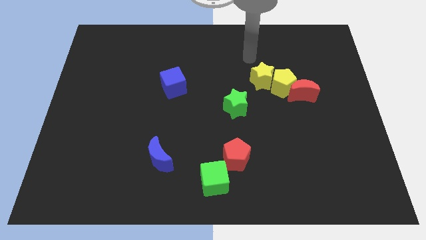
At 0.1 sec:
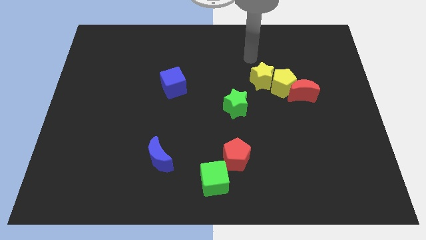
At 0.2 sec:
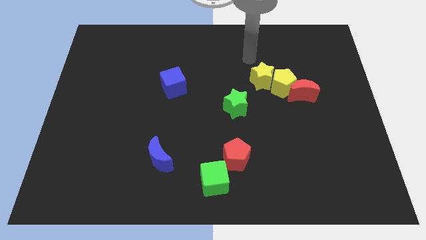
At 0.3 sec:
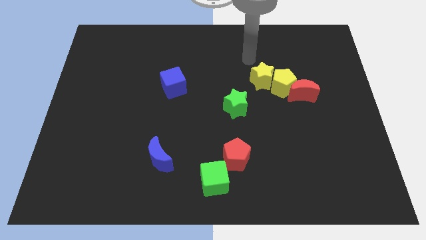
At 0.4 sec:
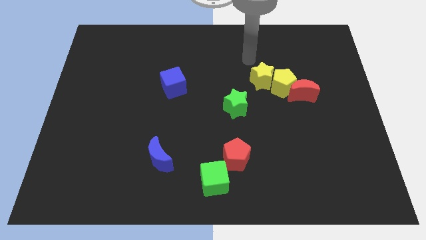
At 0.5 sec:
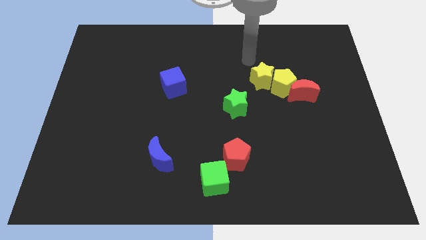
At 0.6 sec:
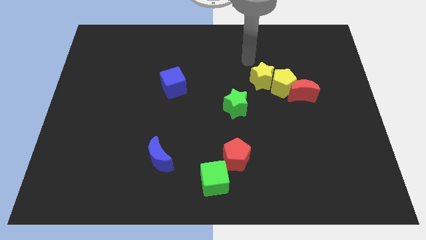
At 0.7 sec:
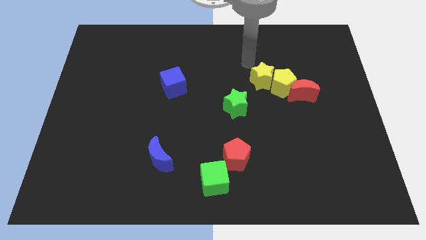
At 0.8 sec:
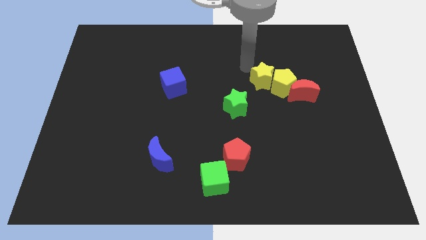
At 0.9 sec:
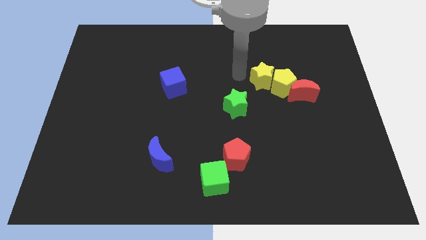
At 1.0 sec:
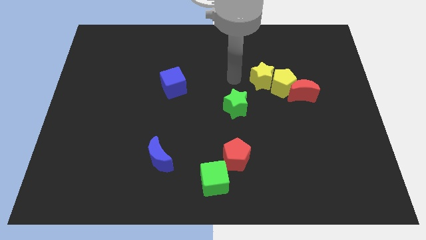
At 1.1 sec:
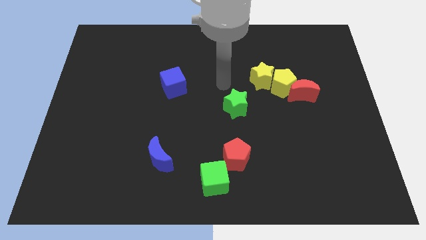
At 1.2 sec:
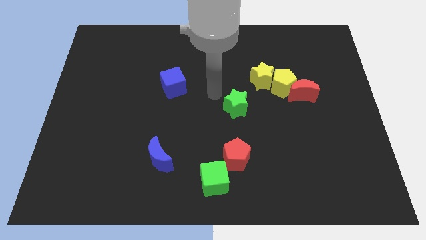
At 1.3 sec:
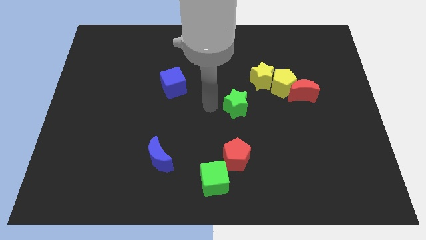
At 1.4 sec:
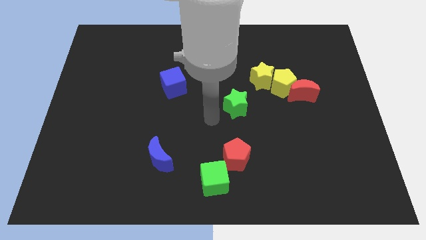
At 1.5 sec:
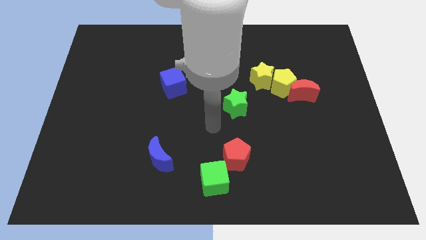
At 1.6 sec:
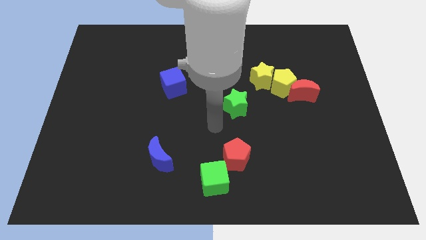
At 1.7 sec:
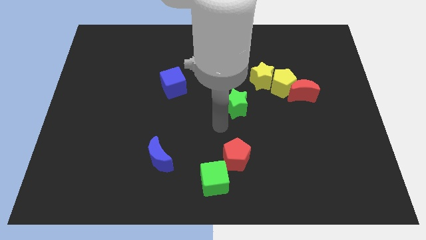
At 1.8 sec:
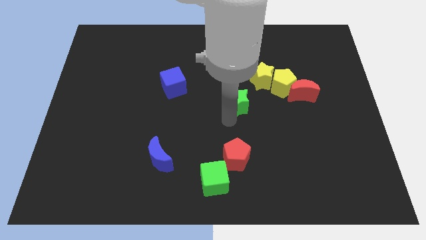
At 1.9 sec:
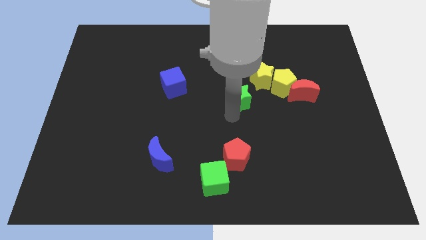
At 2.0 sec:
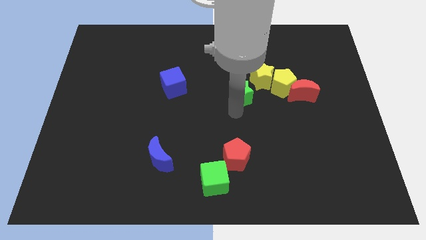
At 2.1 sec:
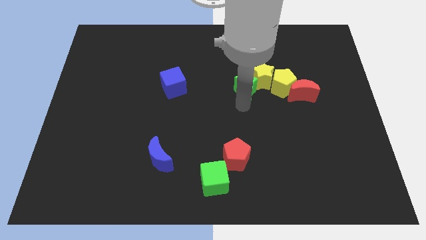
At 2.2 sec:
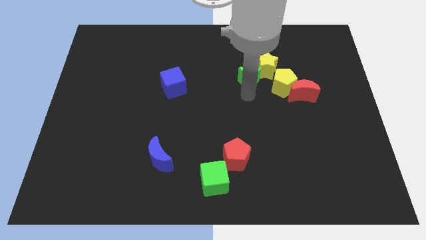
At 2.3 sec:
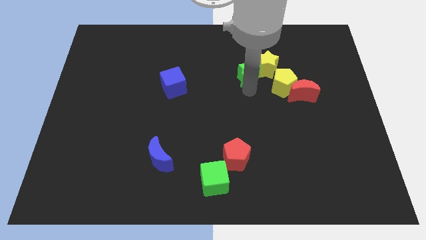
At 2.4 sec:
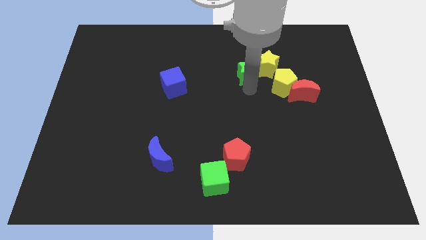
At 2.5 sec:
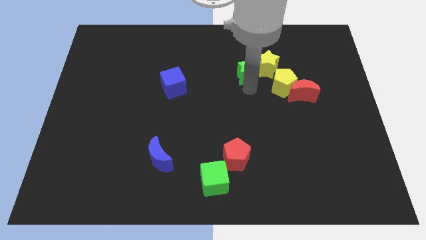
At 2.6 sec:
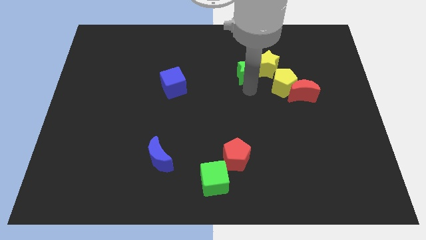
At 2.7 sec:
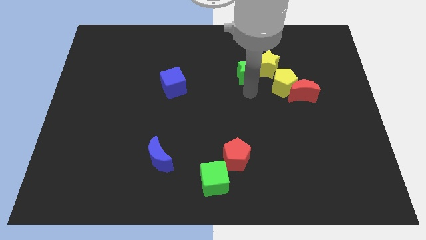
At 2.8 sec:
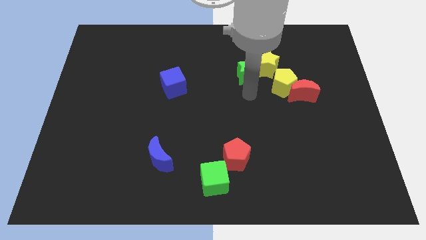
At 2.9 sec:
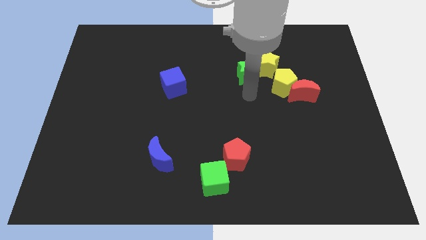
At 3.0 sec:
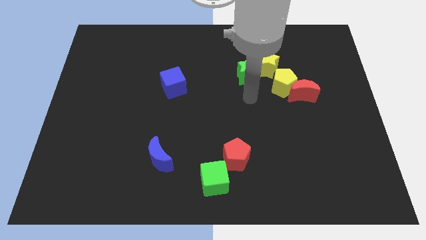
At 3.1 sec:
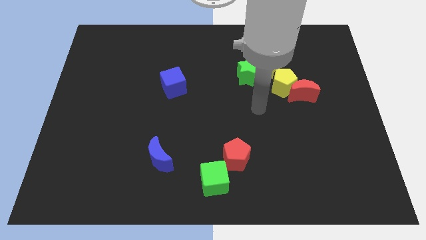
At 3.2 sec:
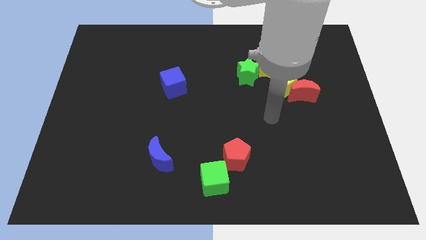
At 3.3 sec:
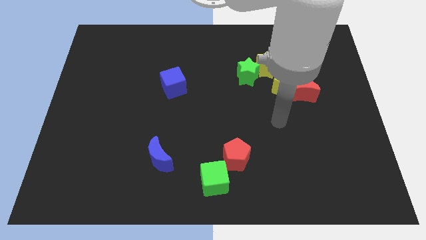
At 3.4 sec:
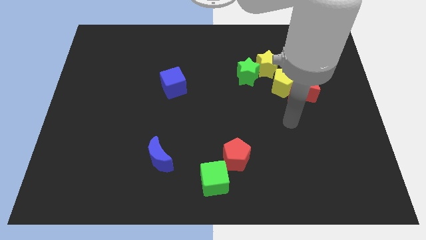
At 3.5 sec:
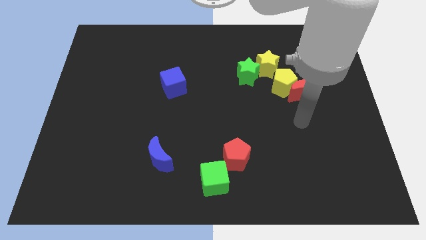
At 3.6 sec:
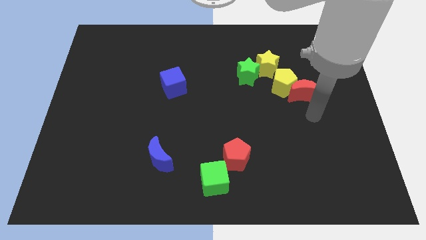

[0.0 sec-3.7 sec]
make a triangle out of green star and the yellow blocks

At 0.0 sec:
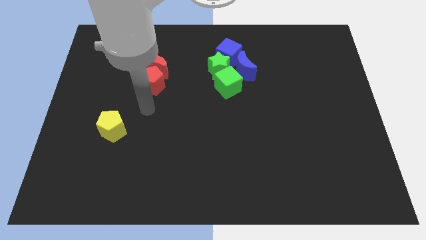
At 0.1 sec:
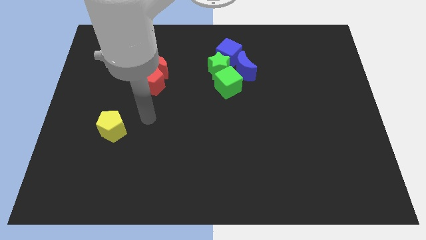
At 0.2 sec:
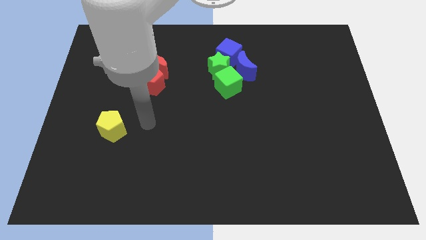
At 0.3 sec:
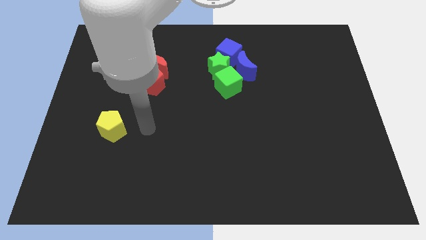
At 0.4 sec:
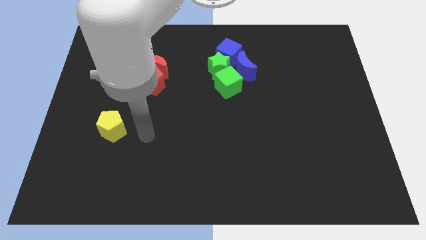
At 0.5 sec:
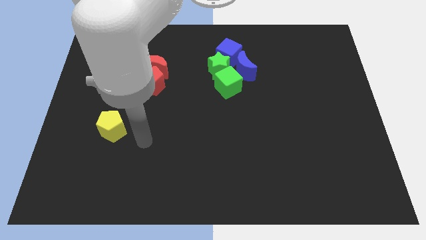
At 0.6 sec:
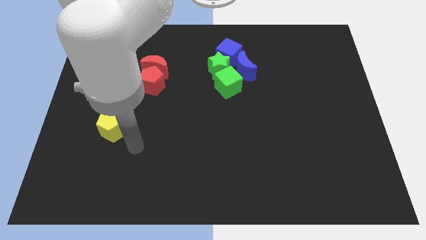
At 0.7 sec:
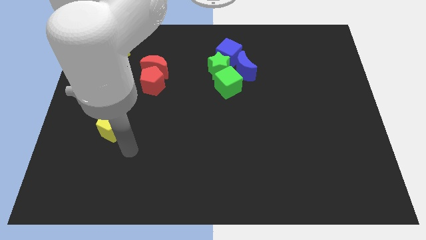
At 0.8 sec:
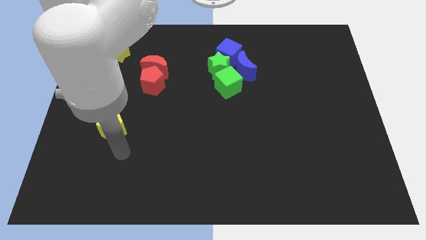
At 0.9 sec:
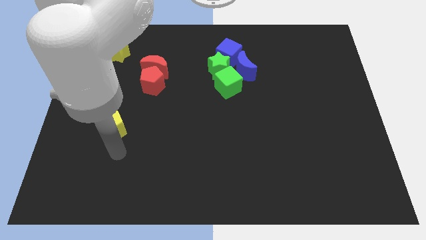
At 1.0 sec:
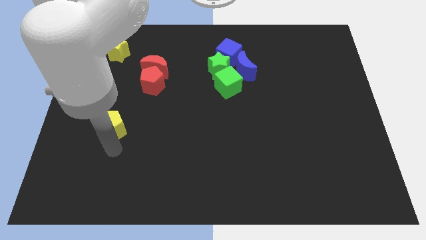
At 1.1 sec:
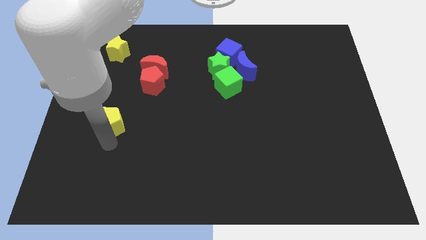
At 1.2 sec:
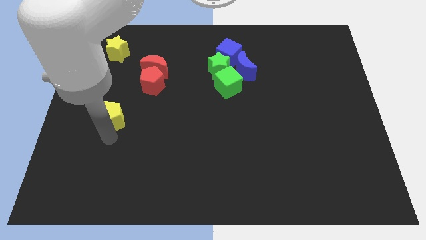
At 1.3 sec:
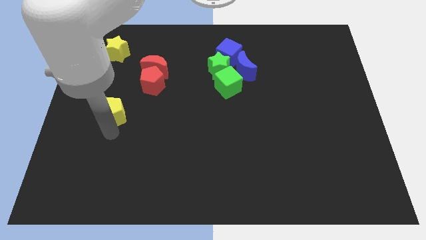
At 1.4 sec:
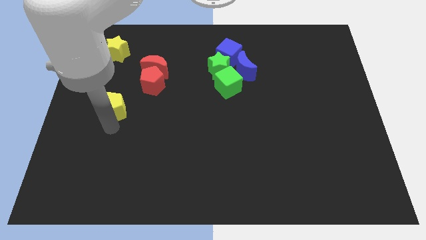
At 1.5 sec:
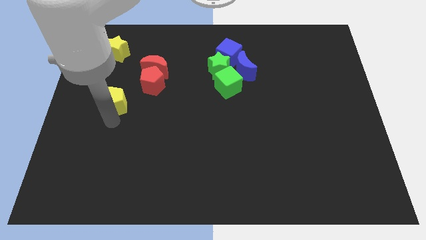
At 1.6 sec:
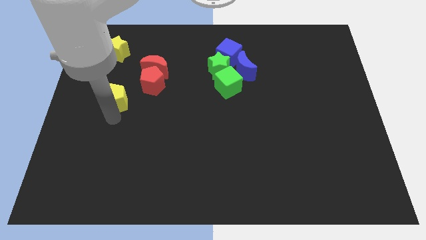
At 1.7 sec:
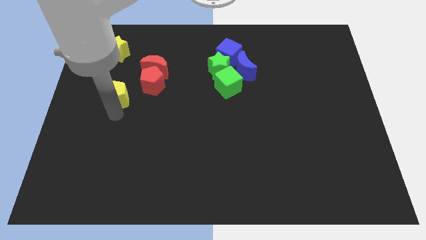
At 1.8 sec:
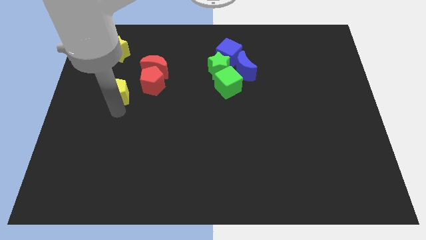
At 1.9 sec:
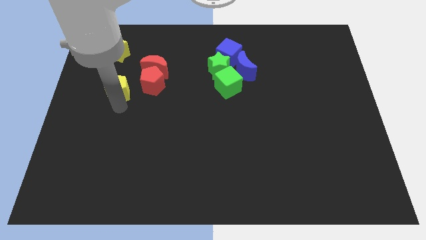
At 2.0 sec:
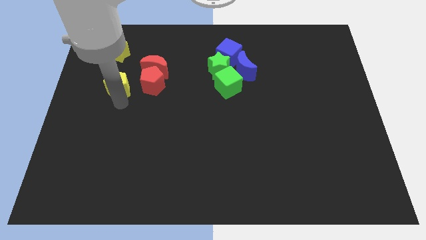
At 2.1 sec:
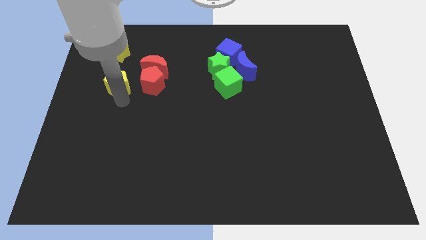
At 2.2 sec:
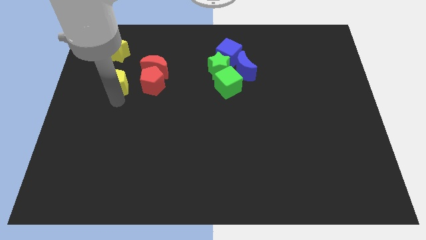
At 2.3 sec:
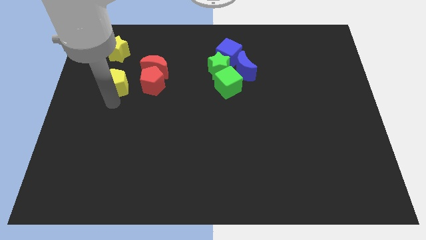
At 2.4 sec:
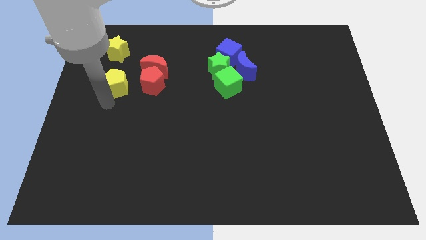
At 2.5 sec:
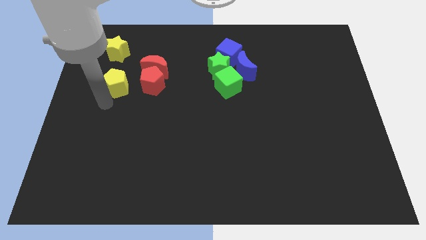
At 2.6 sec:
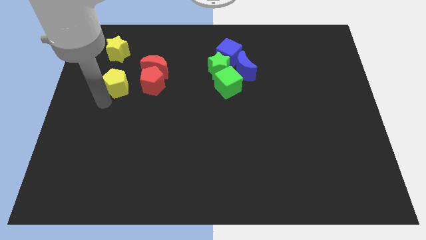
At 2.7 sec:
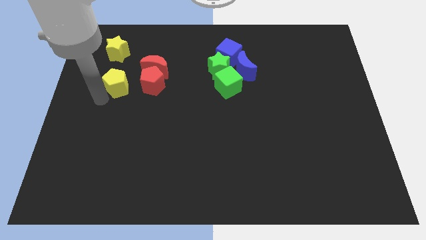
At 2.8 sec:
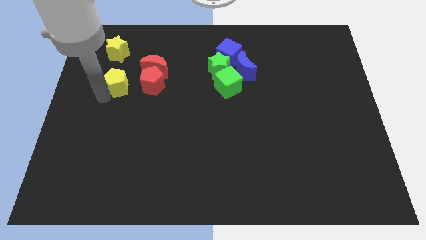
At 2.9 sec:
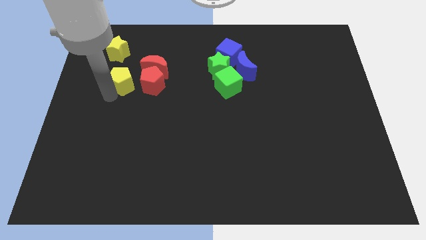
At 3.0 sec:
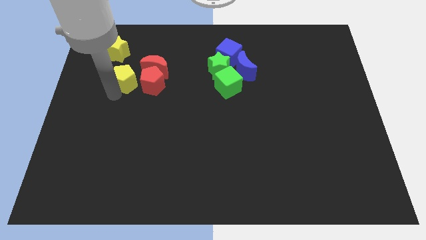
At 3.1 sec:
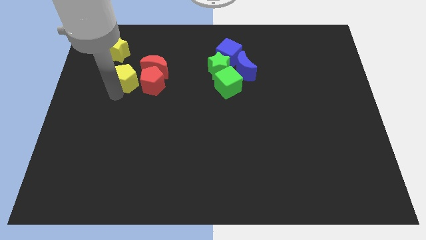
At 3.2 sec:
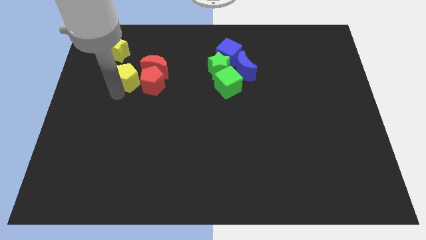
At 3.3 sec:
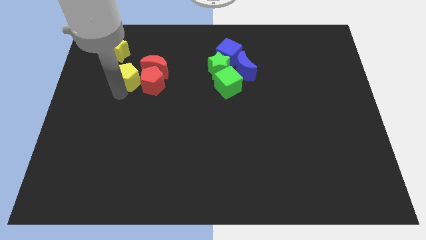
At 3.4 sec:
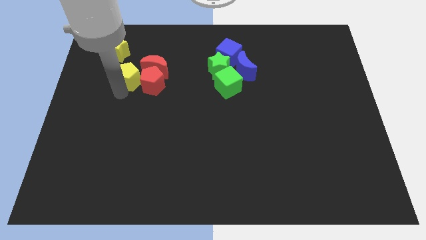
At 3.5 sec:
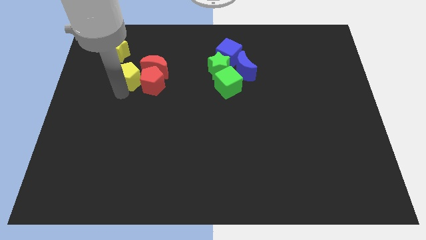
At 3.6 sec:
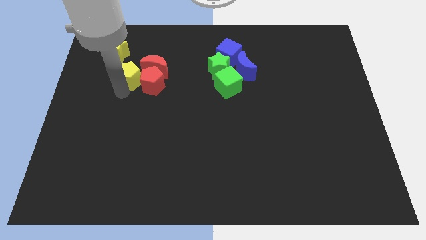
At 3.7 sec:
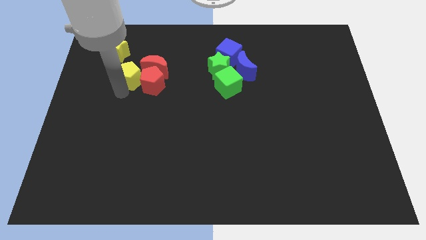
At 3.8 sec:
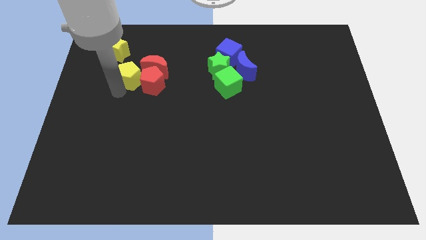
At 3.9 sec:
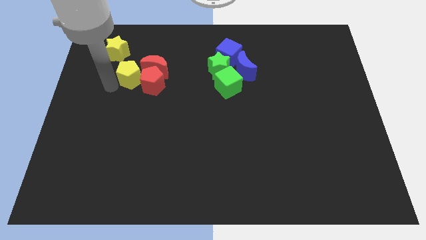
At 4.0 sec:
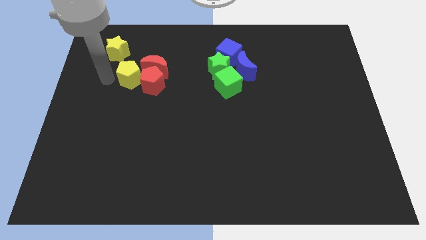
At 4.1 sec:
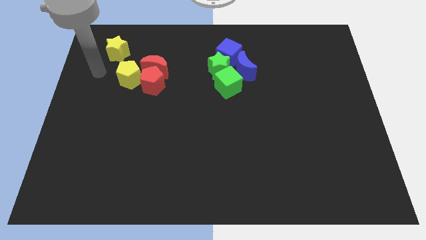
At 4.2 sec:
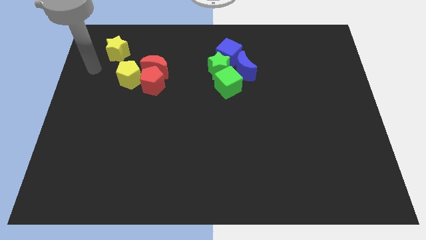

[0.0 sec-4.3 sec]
push yellow pentagon to the left of red pentagon

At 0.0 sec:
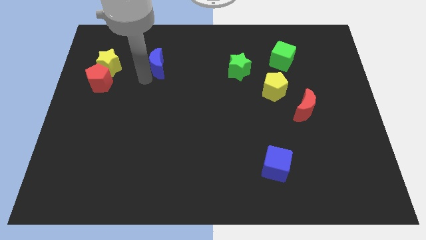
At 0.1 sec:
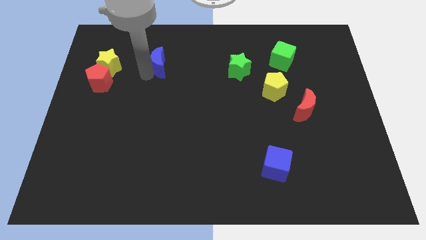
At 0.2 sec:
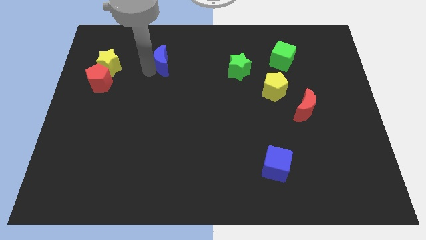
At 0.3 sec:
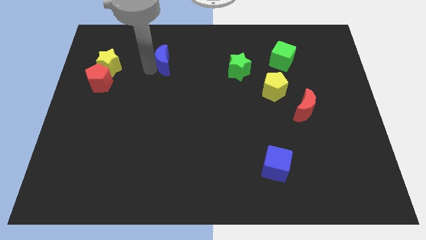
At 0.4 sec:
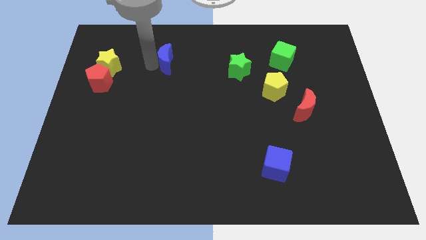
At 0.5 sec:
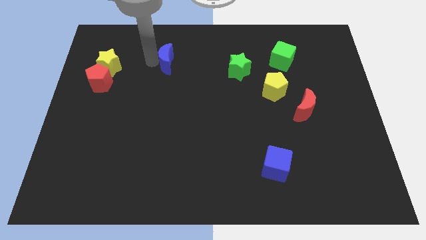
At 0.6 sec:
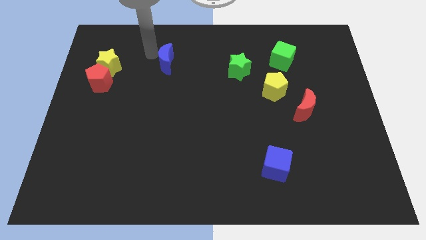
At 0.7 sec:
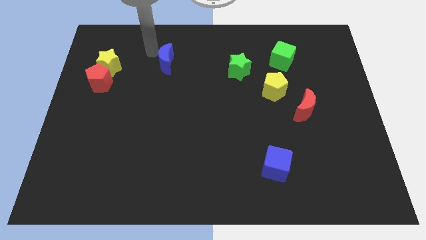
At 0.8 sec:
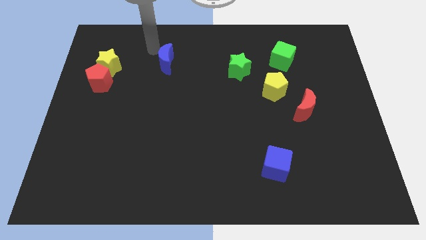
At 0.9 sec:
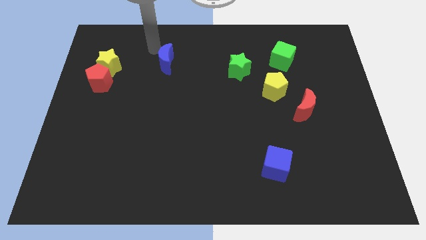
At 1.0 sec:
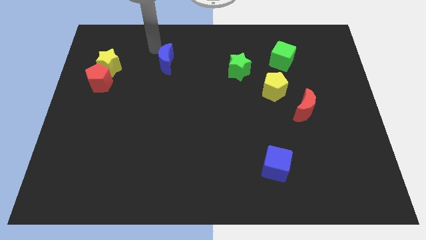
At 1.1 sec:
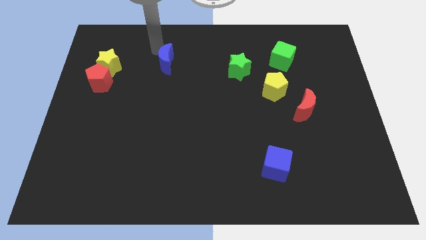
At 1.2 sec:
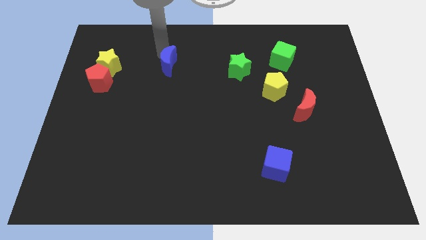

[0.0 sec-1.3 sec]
place blue moon diagonal to the left of the green star
